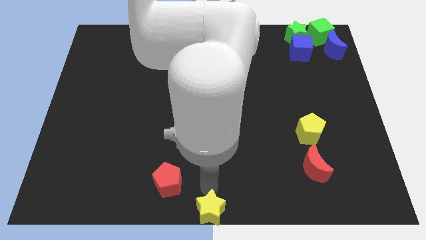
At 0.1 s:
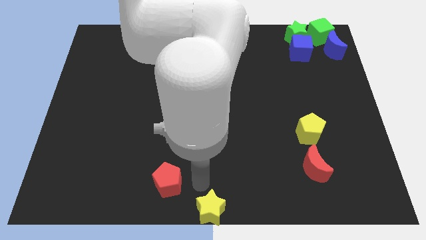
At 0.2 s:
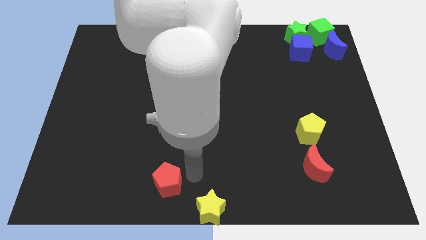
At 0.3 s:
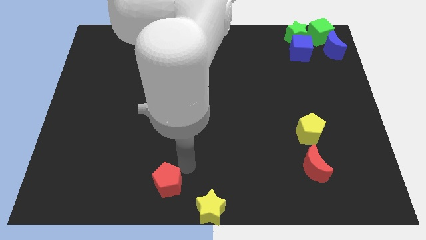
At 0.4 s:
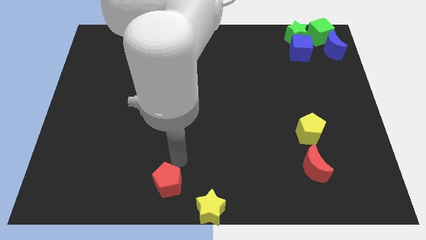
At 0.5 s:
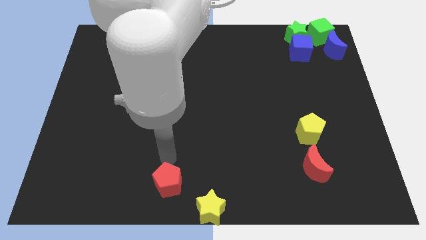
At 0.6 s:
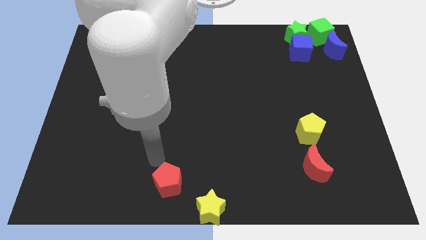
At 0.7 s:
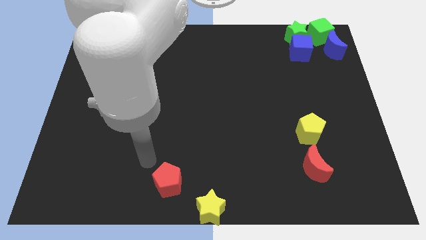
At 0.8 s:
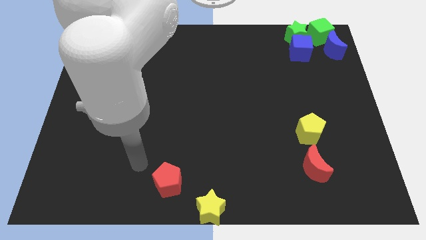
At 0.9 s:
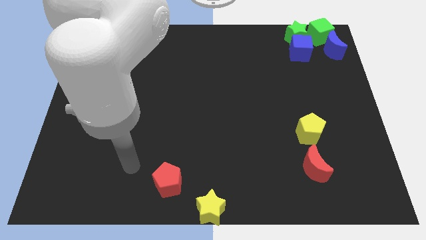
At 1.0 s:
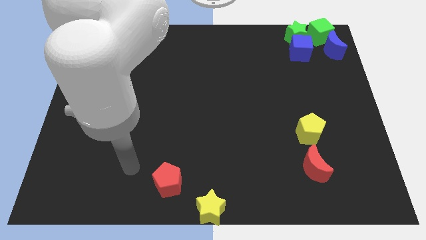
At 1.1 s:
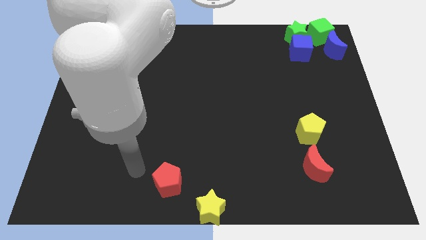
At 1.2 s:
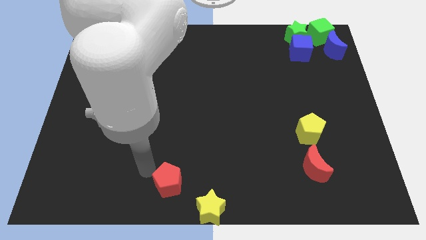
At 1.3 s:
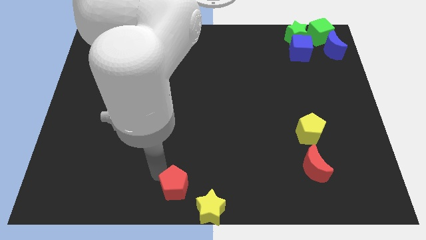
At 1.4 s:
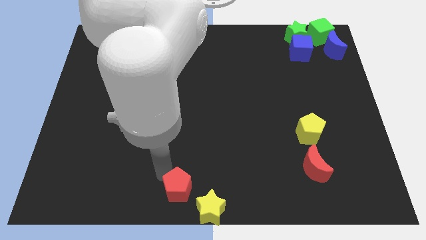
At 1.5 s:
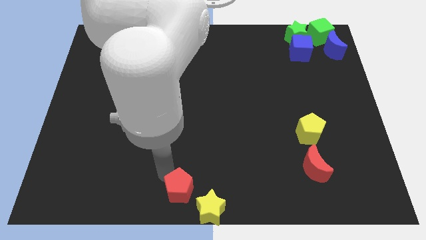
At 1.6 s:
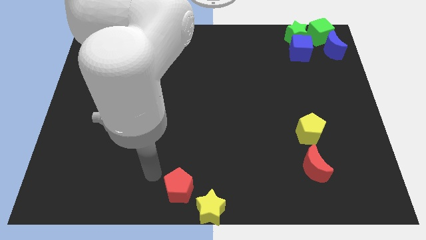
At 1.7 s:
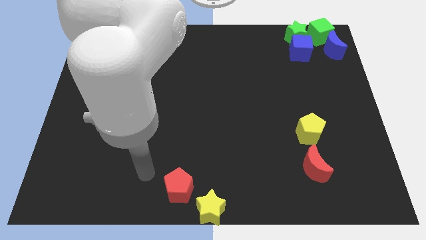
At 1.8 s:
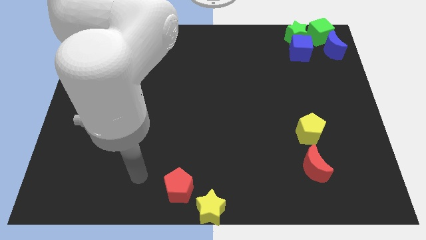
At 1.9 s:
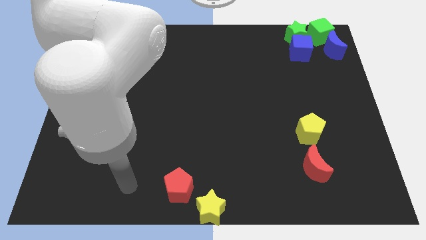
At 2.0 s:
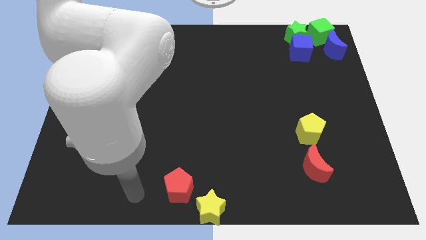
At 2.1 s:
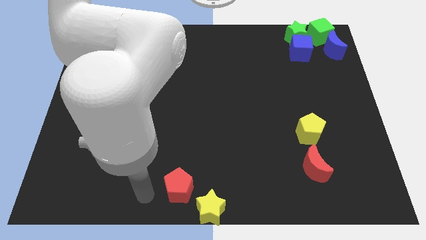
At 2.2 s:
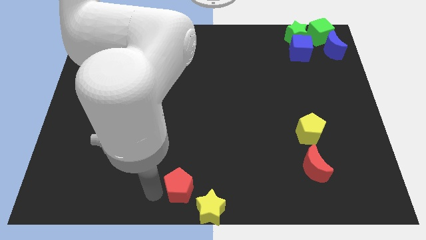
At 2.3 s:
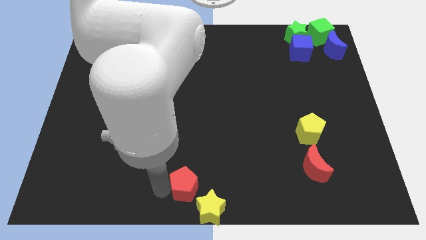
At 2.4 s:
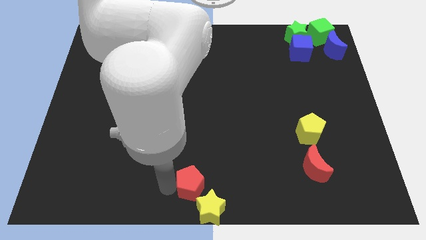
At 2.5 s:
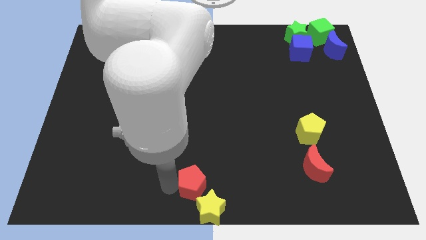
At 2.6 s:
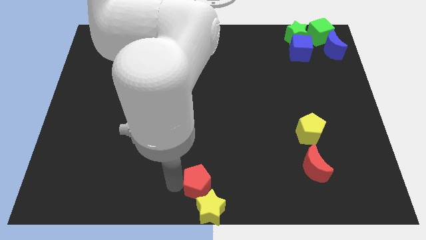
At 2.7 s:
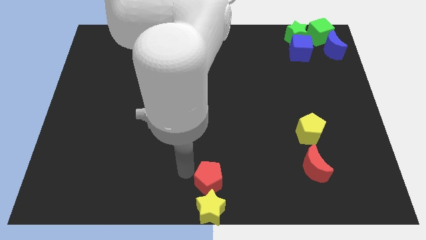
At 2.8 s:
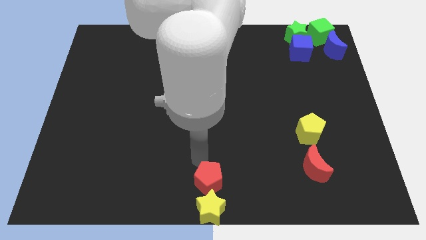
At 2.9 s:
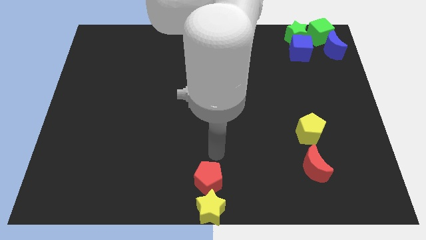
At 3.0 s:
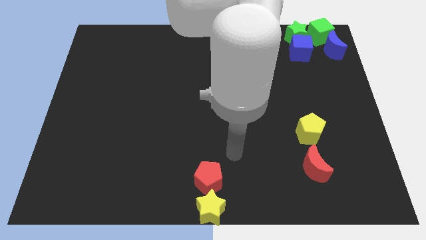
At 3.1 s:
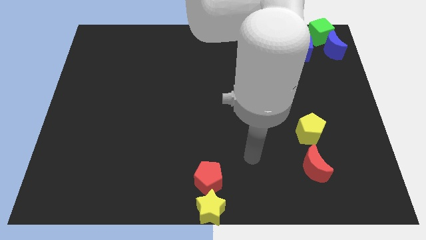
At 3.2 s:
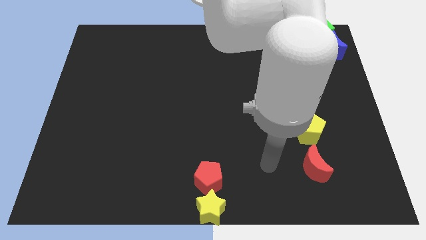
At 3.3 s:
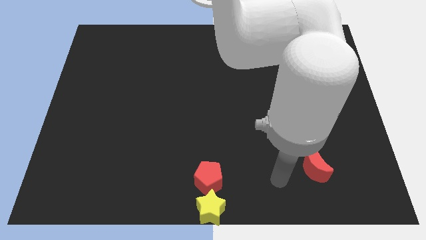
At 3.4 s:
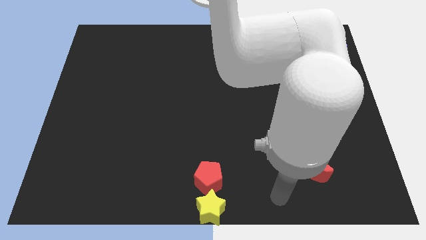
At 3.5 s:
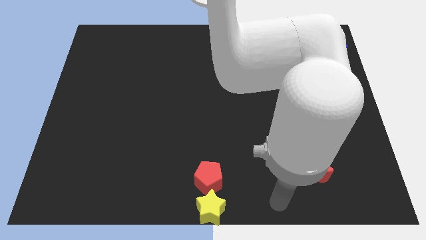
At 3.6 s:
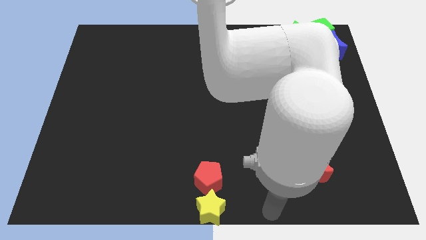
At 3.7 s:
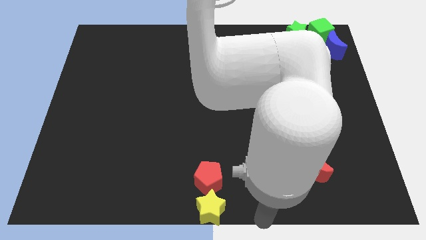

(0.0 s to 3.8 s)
move the red pentagon above the yellow star

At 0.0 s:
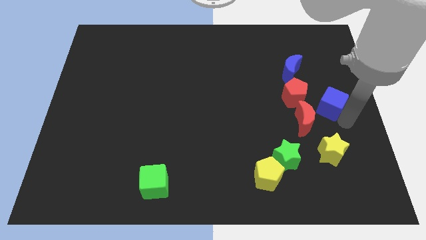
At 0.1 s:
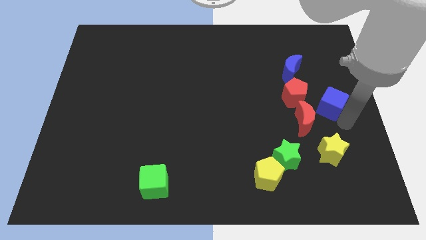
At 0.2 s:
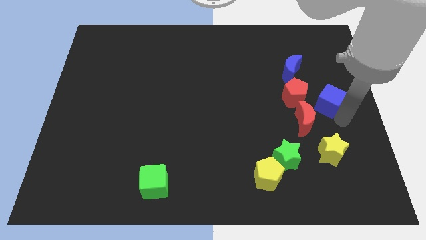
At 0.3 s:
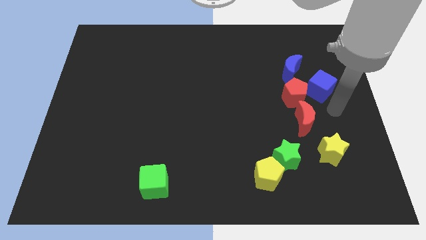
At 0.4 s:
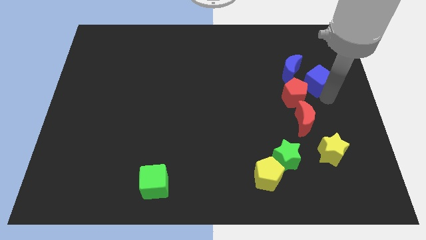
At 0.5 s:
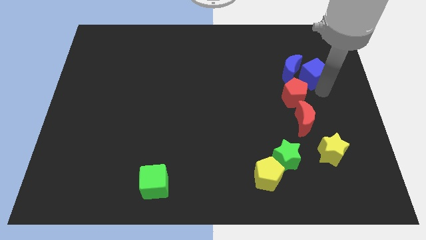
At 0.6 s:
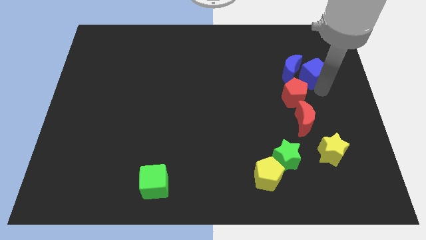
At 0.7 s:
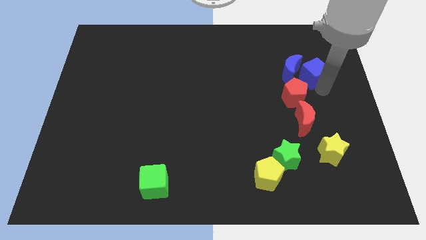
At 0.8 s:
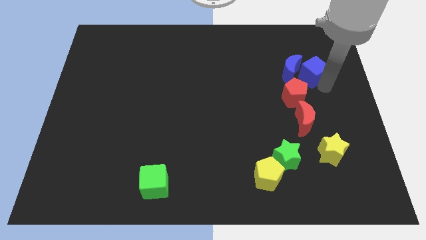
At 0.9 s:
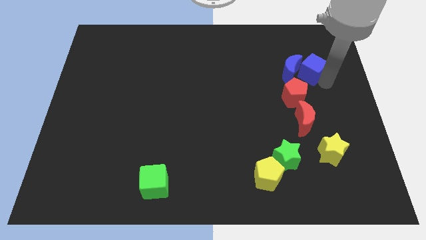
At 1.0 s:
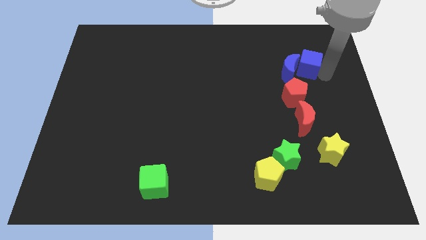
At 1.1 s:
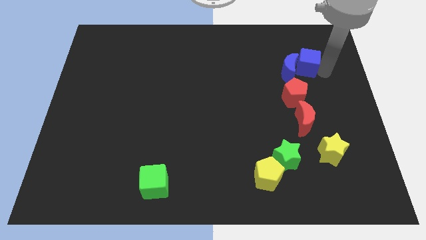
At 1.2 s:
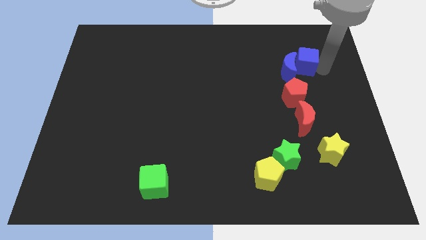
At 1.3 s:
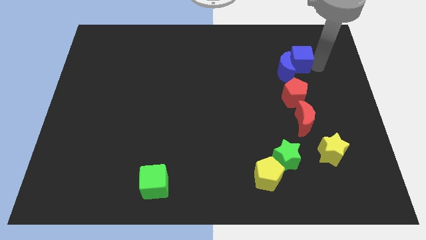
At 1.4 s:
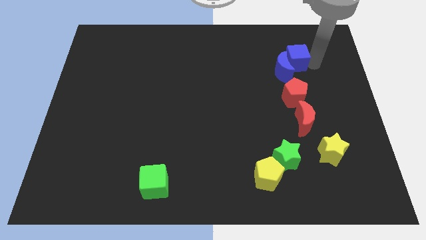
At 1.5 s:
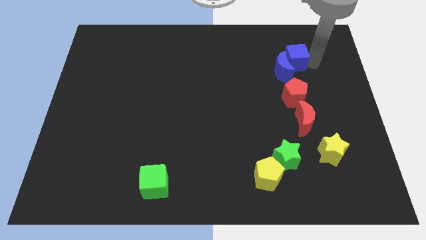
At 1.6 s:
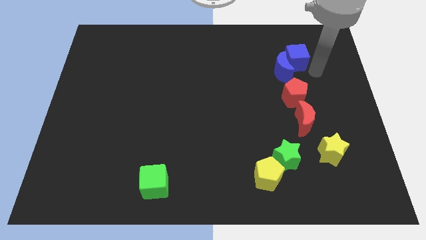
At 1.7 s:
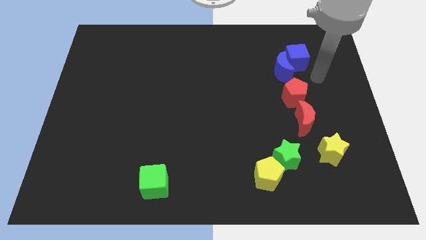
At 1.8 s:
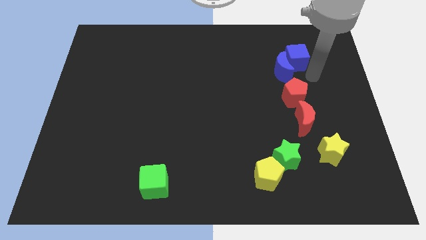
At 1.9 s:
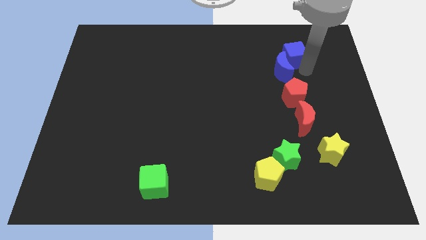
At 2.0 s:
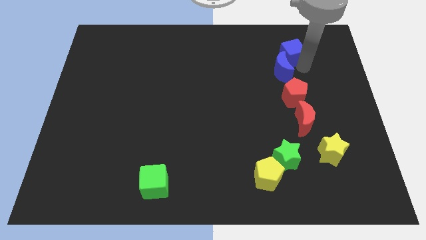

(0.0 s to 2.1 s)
move the blue cube diagonally to the blue crescent

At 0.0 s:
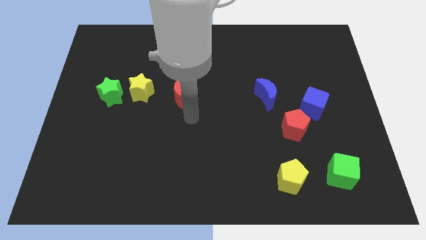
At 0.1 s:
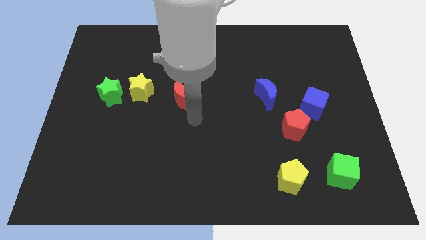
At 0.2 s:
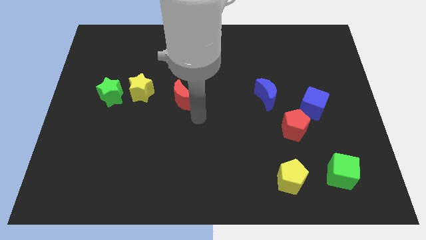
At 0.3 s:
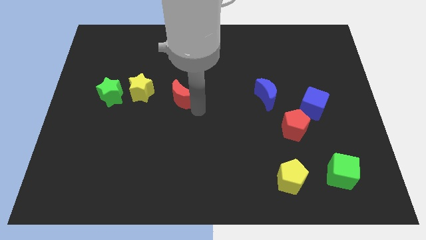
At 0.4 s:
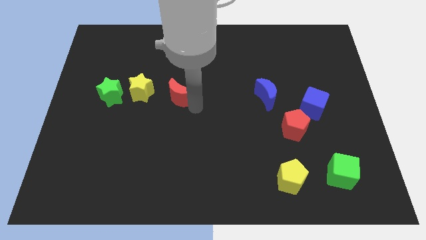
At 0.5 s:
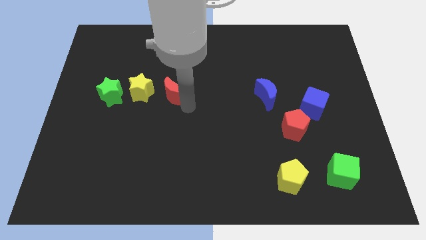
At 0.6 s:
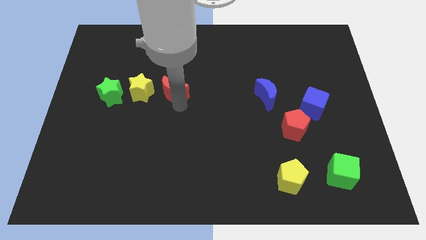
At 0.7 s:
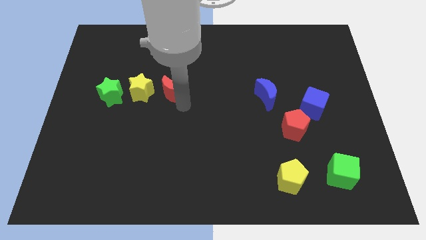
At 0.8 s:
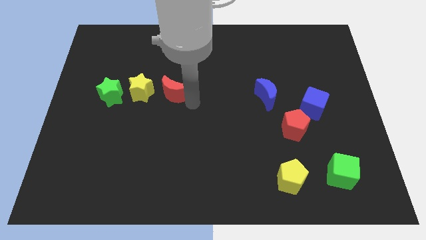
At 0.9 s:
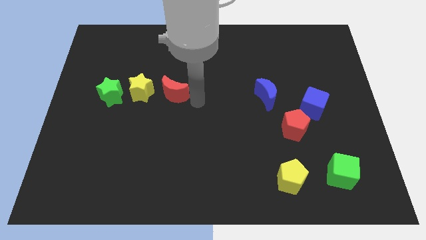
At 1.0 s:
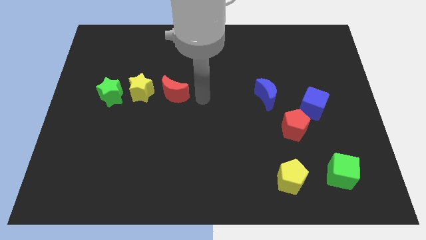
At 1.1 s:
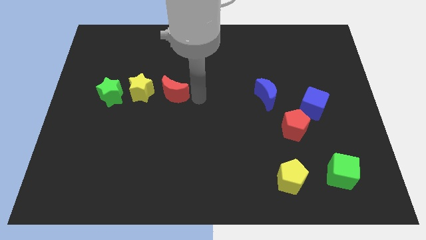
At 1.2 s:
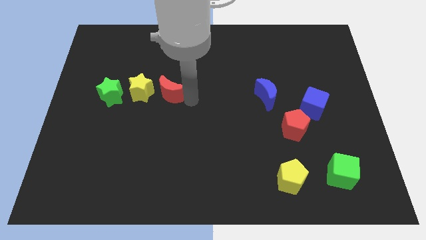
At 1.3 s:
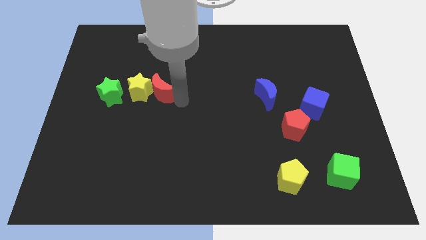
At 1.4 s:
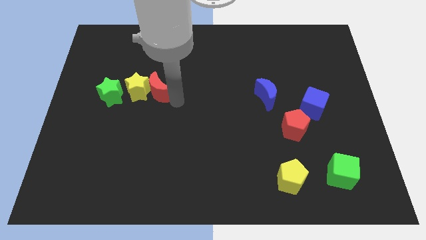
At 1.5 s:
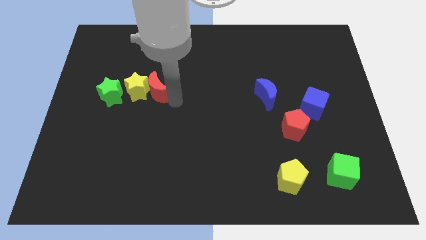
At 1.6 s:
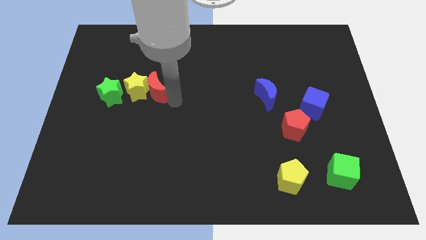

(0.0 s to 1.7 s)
push the red moon into the yellow star

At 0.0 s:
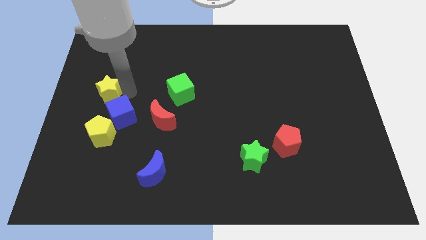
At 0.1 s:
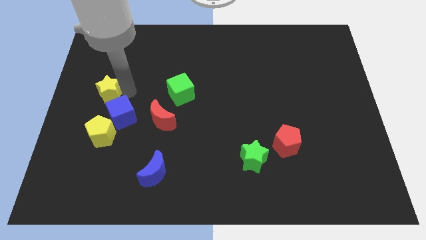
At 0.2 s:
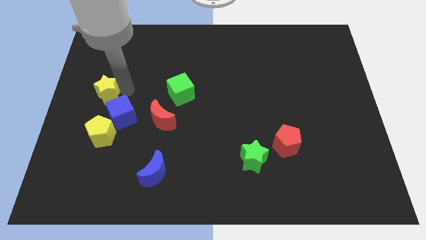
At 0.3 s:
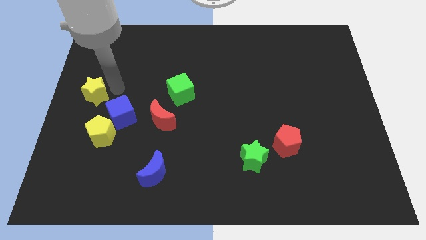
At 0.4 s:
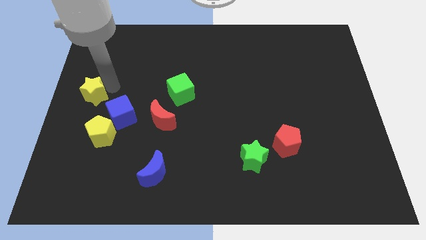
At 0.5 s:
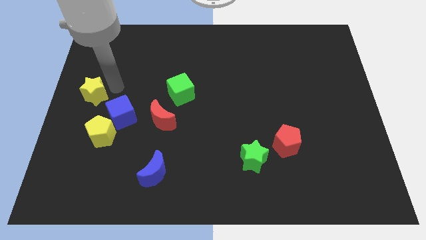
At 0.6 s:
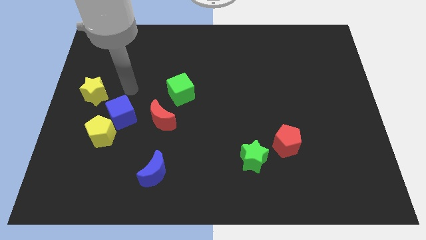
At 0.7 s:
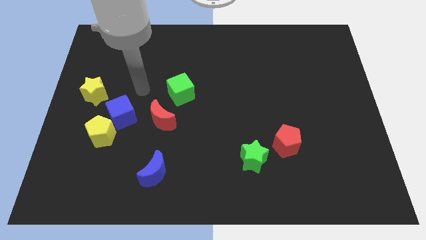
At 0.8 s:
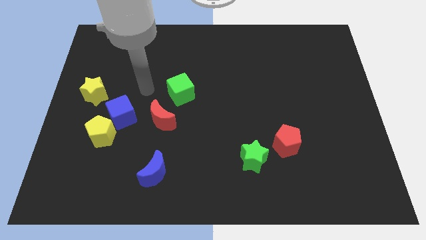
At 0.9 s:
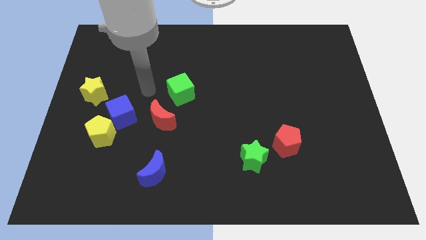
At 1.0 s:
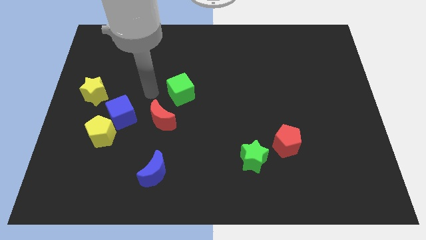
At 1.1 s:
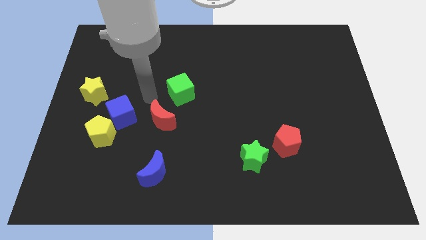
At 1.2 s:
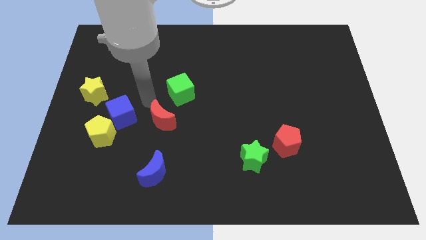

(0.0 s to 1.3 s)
push the yellow star to the top left side of the blue cube
